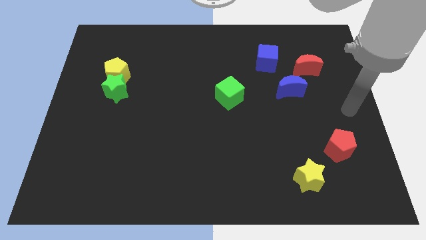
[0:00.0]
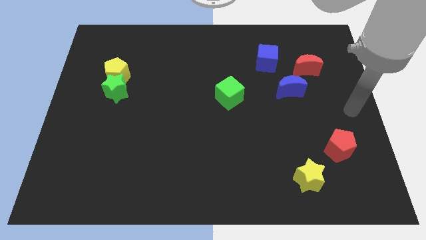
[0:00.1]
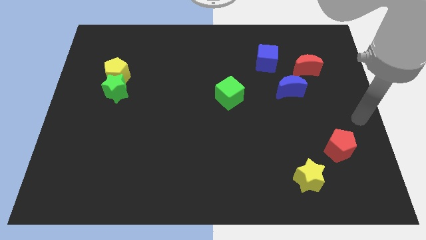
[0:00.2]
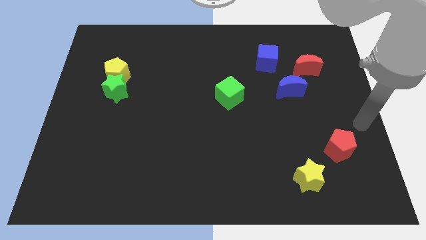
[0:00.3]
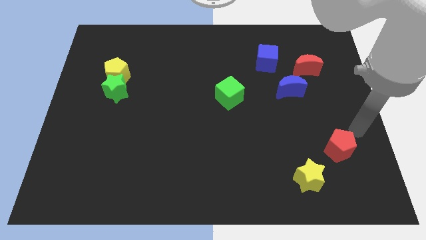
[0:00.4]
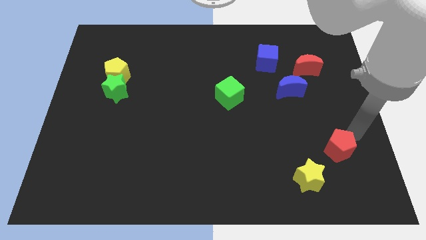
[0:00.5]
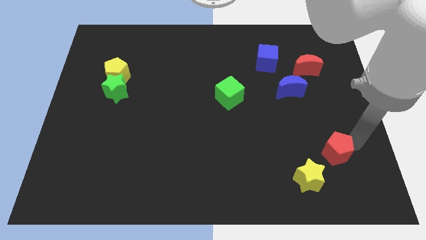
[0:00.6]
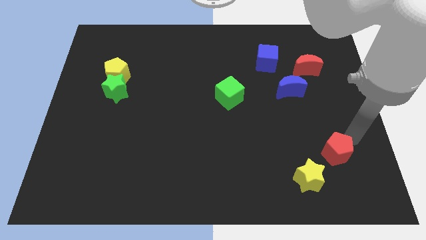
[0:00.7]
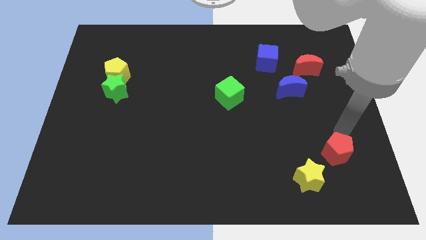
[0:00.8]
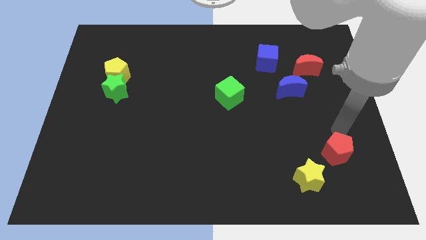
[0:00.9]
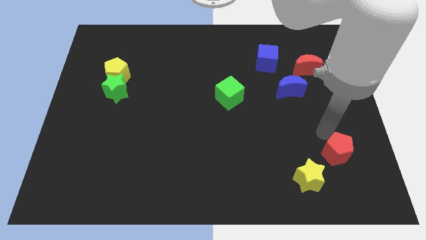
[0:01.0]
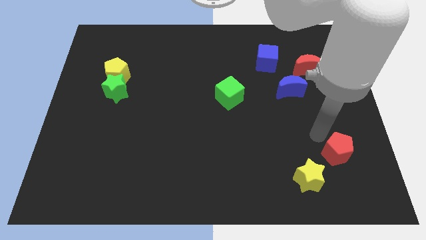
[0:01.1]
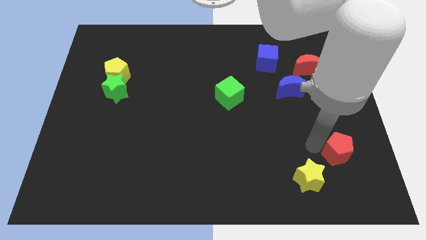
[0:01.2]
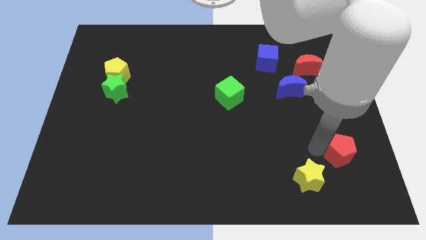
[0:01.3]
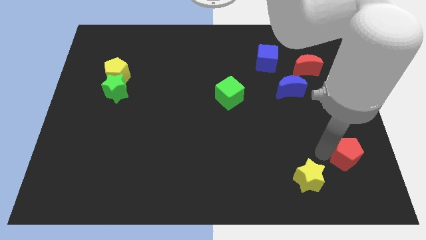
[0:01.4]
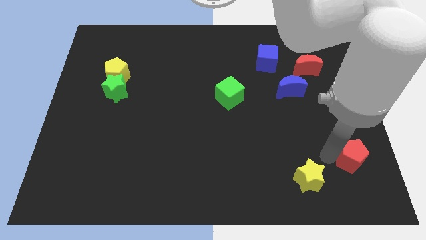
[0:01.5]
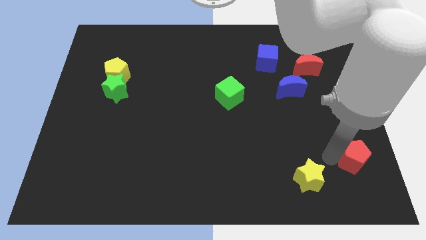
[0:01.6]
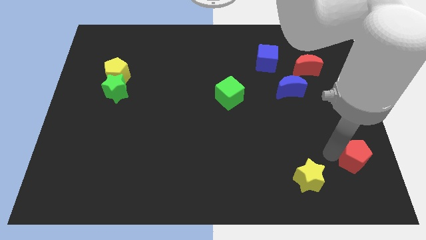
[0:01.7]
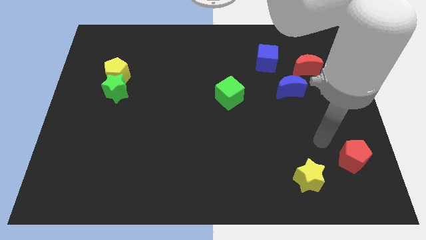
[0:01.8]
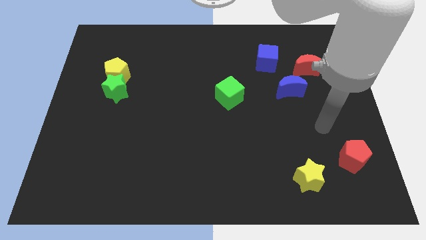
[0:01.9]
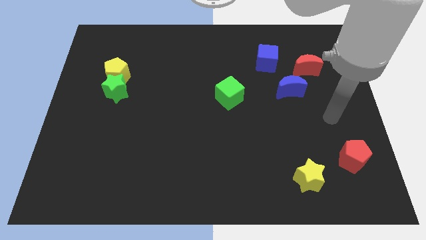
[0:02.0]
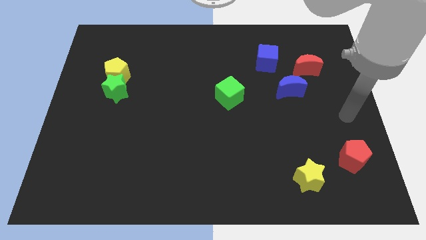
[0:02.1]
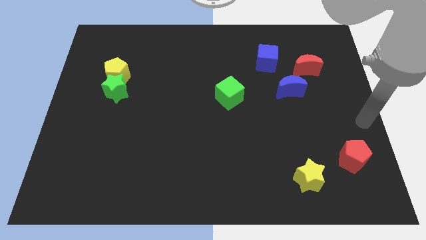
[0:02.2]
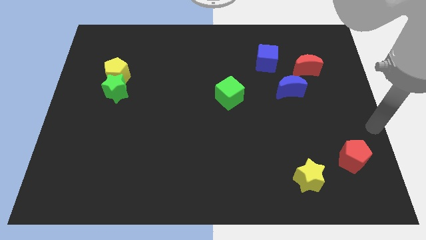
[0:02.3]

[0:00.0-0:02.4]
slightly push the red pentagon downward

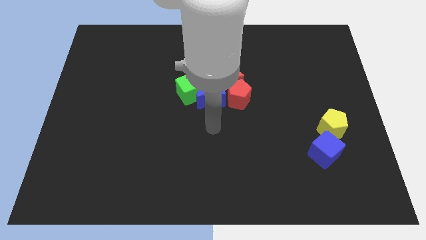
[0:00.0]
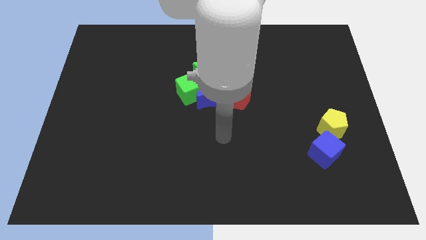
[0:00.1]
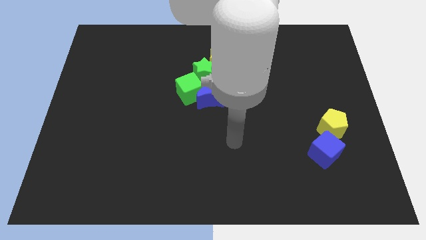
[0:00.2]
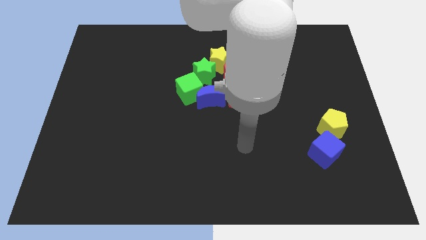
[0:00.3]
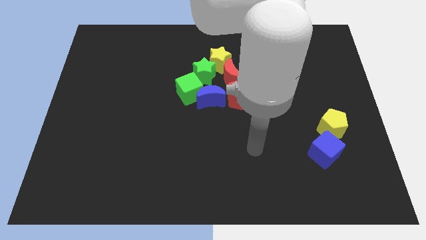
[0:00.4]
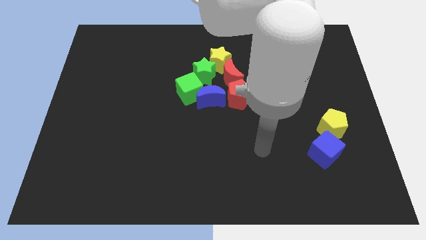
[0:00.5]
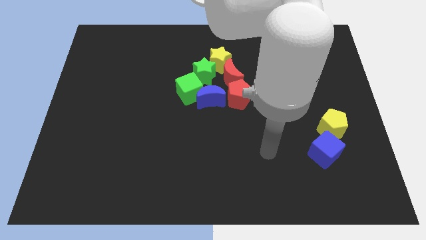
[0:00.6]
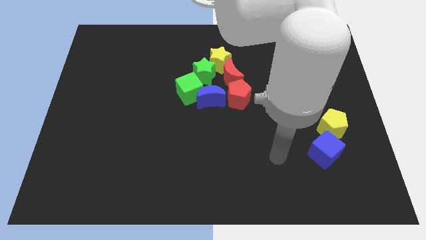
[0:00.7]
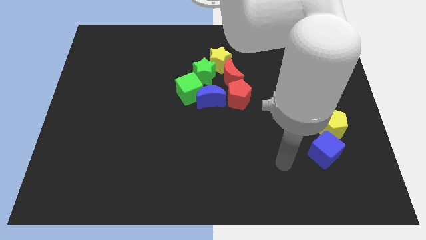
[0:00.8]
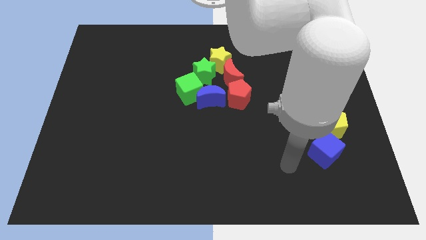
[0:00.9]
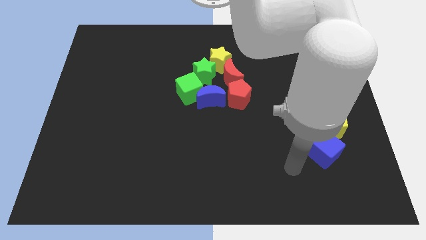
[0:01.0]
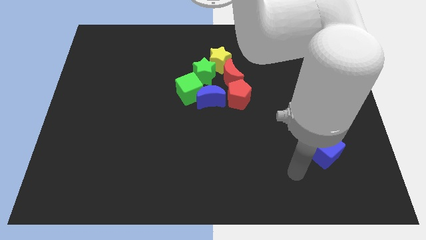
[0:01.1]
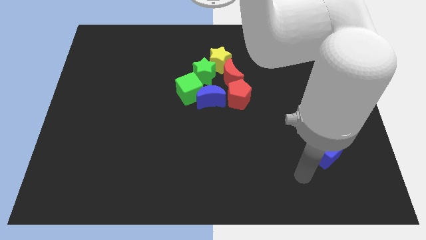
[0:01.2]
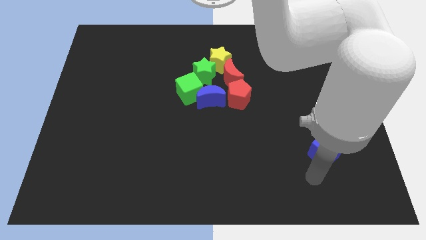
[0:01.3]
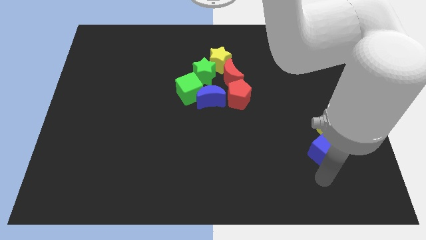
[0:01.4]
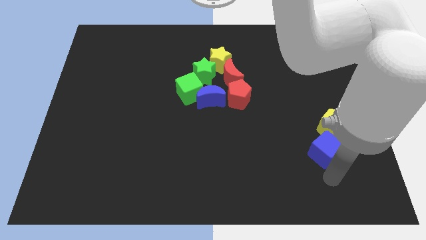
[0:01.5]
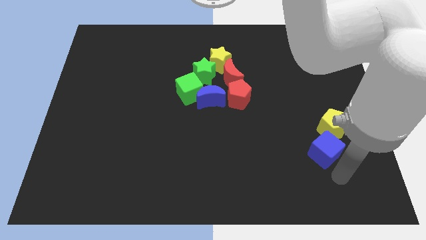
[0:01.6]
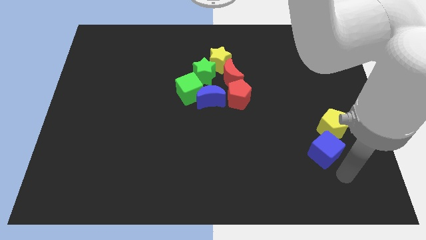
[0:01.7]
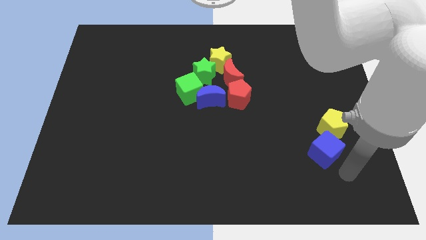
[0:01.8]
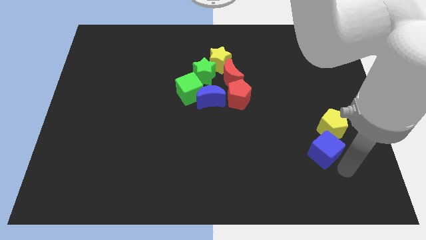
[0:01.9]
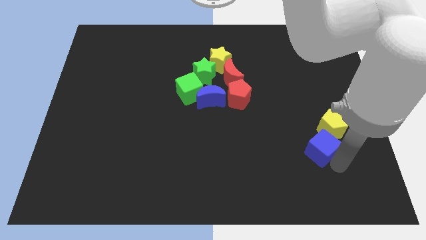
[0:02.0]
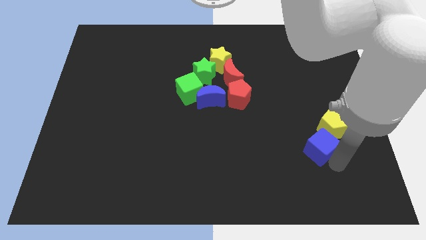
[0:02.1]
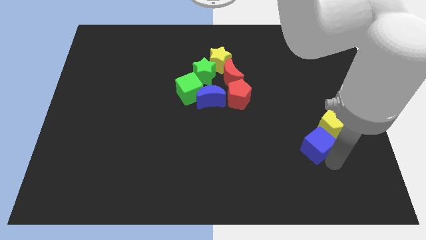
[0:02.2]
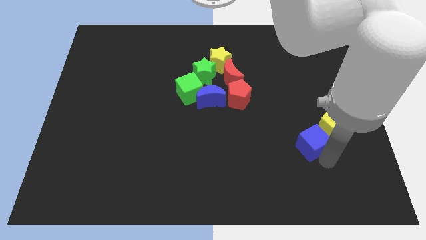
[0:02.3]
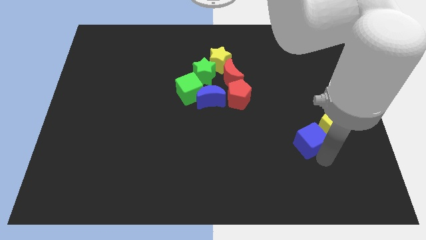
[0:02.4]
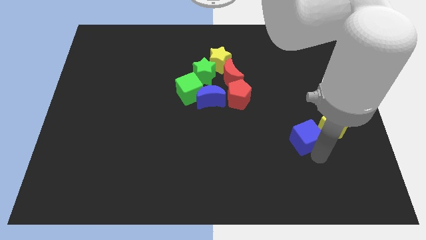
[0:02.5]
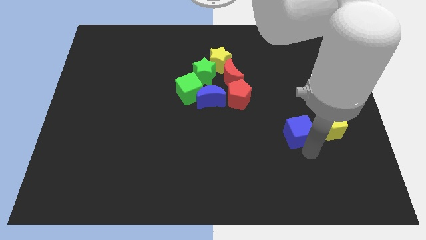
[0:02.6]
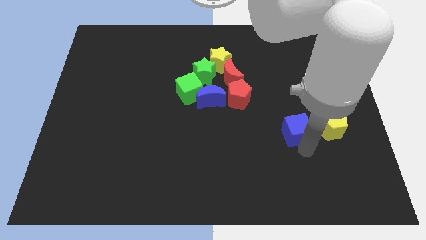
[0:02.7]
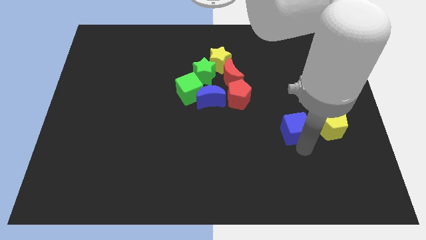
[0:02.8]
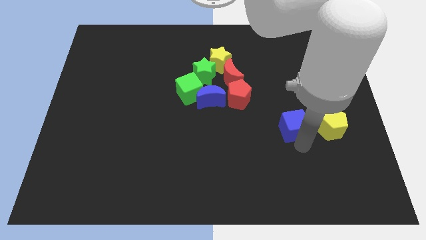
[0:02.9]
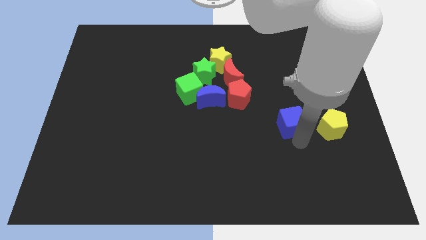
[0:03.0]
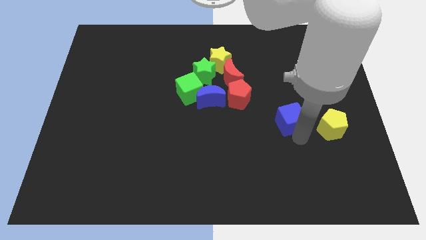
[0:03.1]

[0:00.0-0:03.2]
push the blue cube to the left of the yellow pentagon

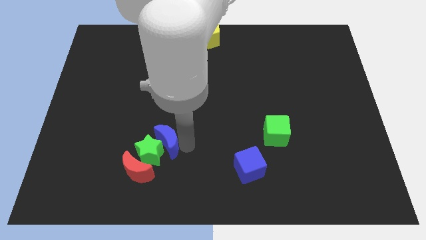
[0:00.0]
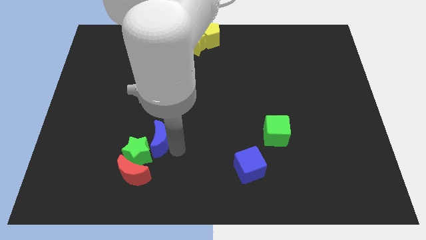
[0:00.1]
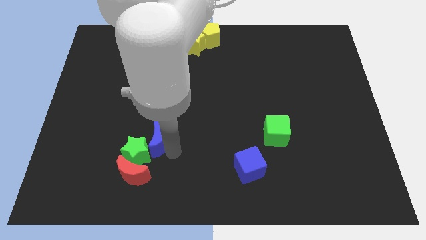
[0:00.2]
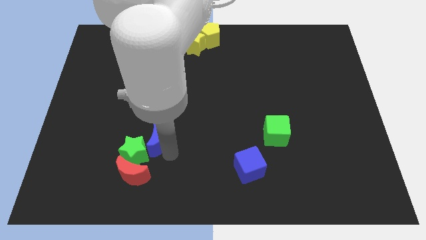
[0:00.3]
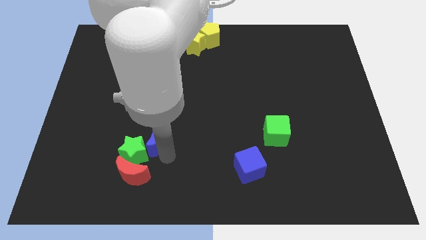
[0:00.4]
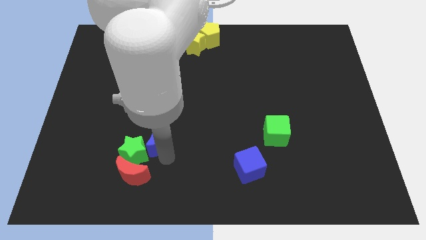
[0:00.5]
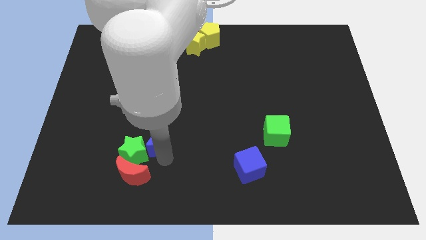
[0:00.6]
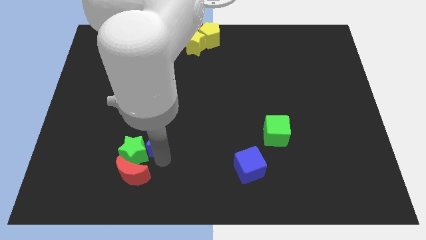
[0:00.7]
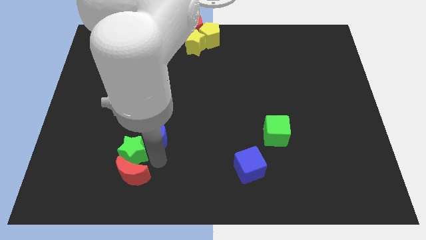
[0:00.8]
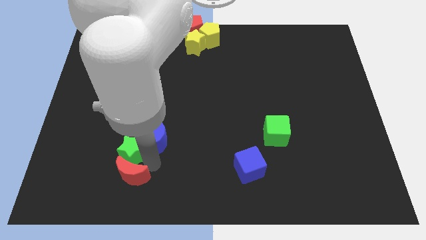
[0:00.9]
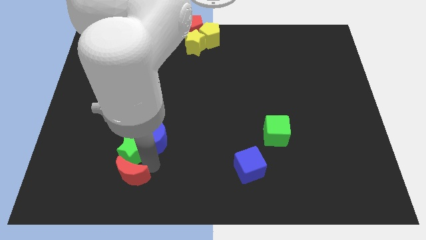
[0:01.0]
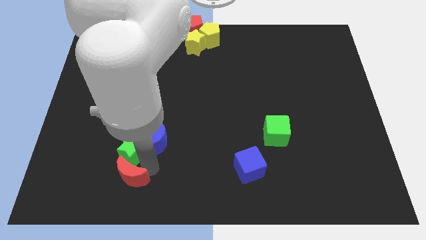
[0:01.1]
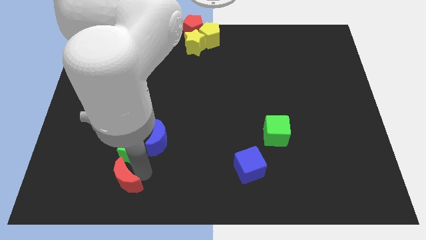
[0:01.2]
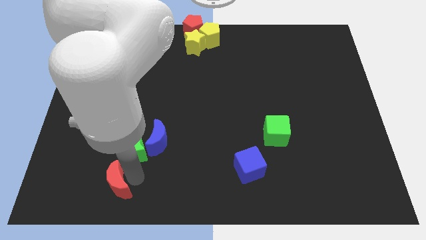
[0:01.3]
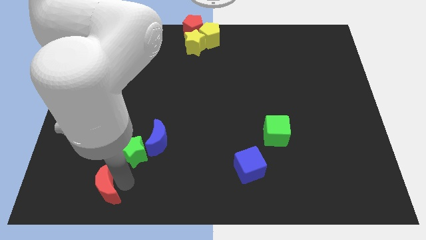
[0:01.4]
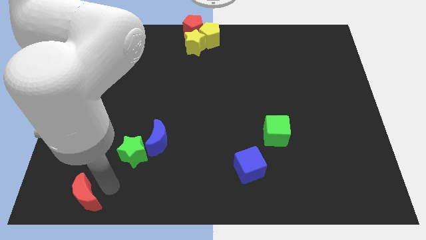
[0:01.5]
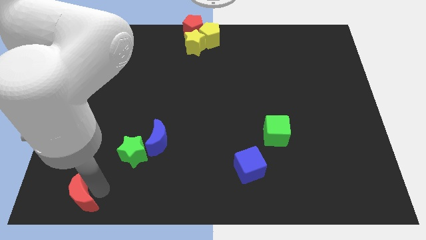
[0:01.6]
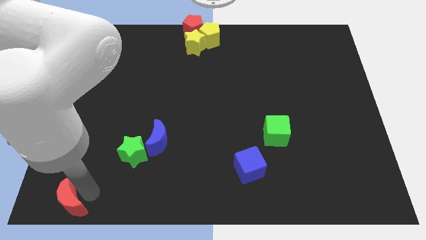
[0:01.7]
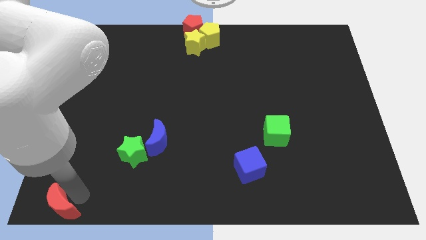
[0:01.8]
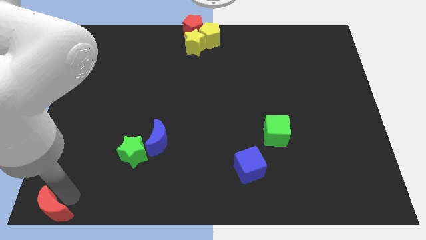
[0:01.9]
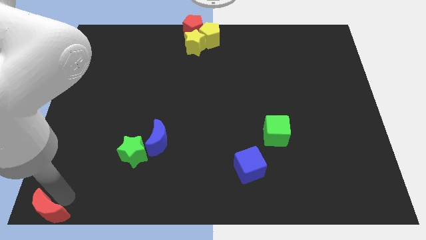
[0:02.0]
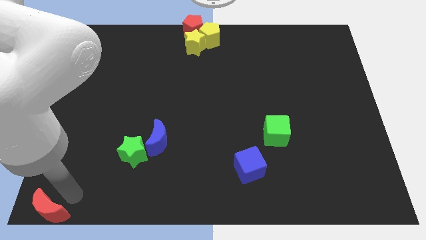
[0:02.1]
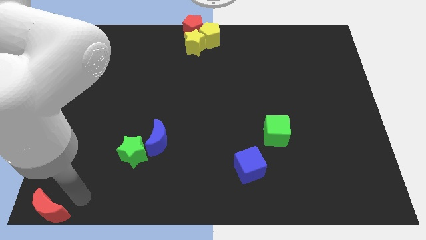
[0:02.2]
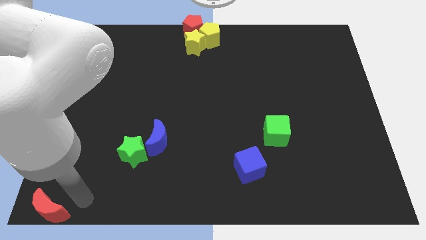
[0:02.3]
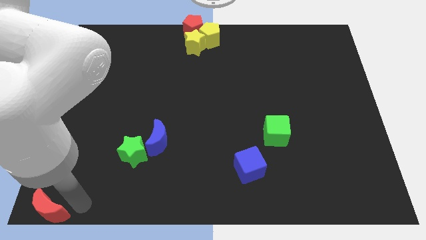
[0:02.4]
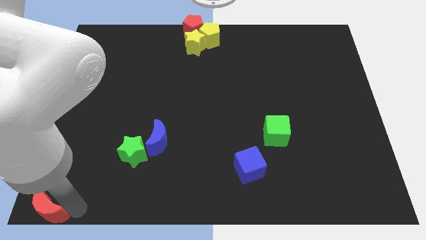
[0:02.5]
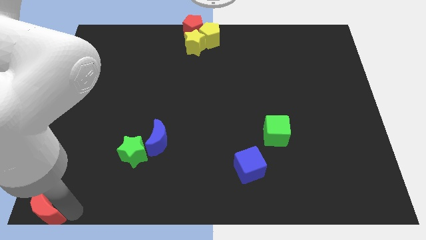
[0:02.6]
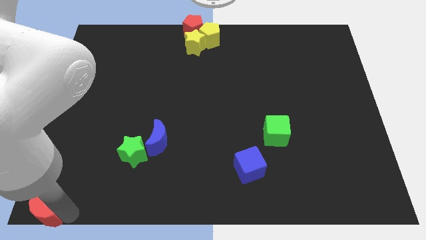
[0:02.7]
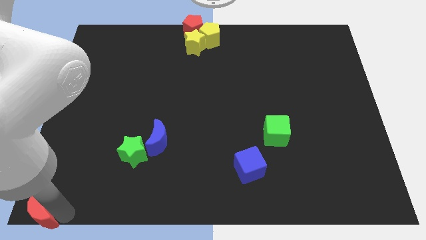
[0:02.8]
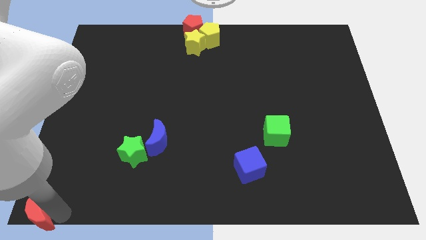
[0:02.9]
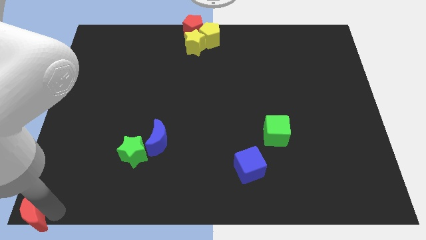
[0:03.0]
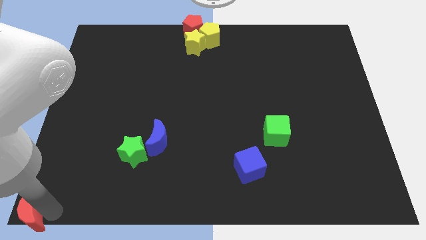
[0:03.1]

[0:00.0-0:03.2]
place the red crescent at the bottom left corner

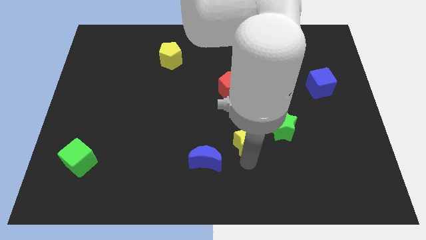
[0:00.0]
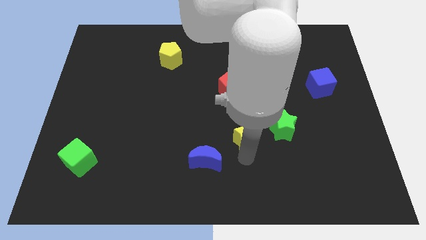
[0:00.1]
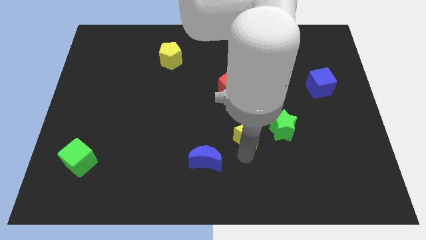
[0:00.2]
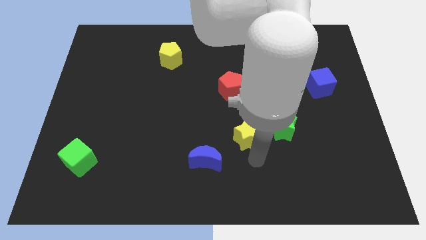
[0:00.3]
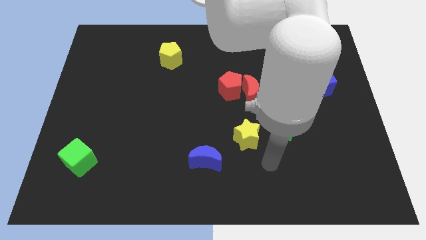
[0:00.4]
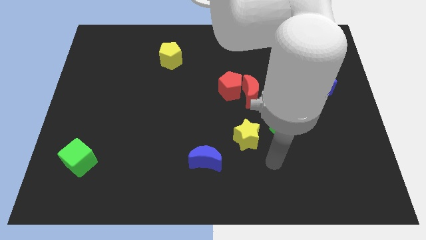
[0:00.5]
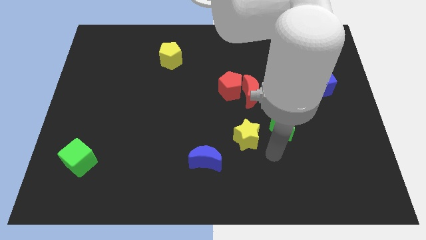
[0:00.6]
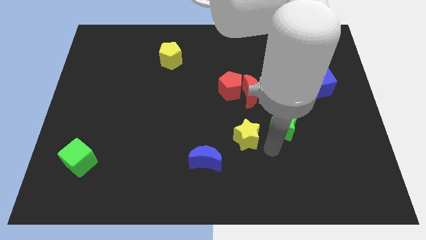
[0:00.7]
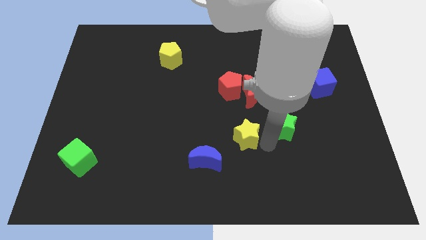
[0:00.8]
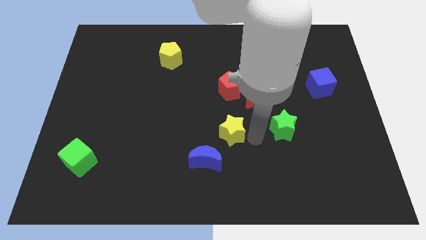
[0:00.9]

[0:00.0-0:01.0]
move the yellow star to the left of the green star
